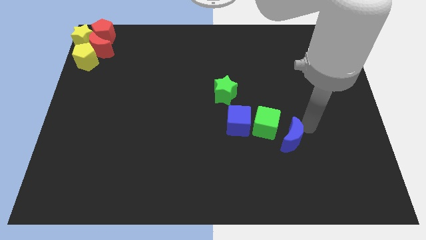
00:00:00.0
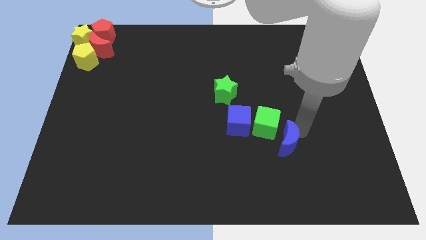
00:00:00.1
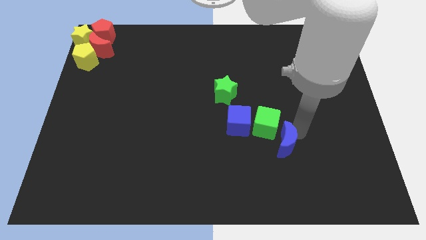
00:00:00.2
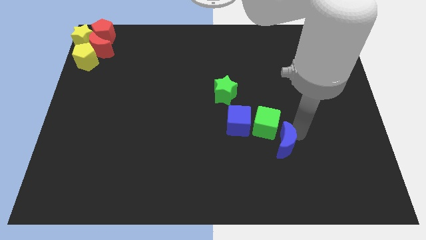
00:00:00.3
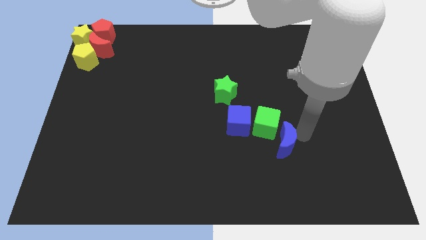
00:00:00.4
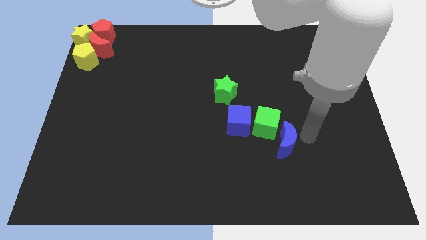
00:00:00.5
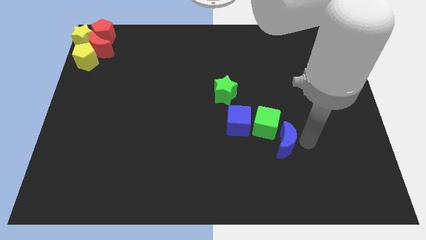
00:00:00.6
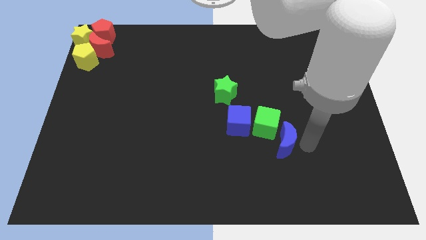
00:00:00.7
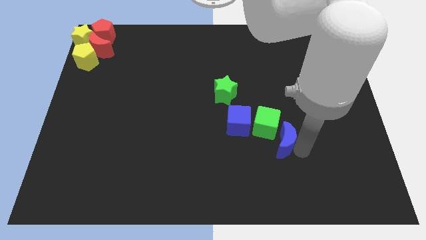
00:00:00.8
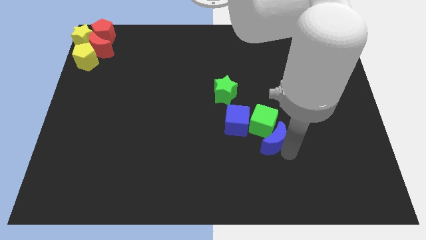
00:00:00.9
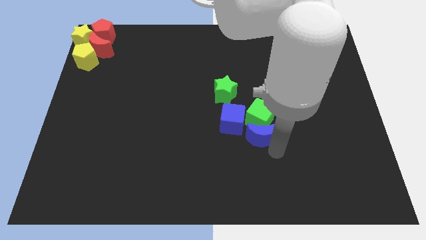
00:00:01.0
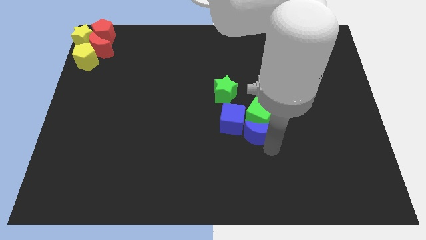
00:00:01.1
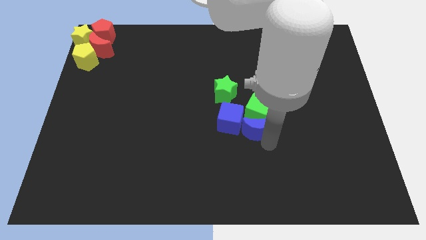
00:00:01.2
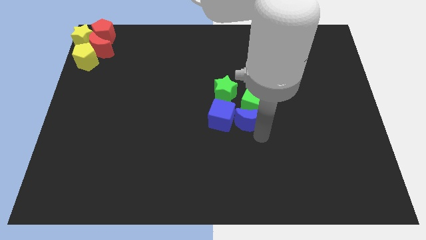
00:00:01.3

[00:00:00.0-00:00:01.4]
slide the blue moon into the green cube

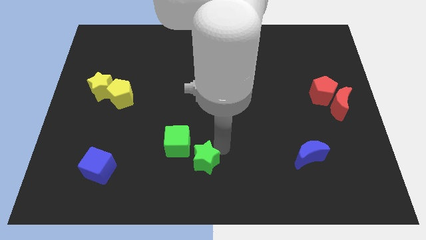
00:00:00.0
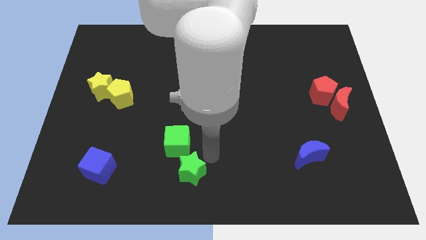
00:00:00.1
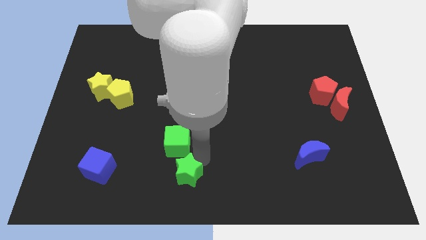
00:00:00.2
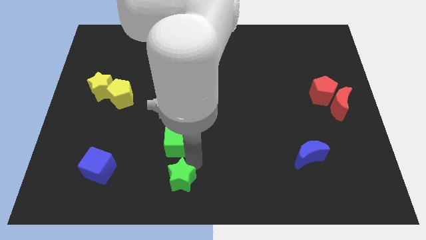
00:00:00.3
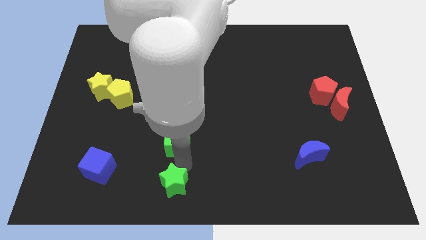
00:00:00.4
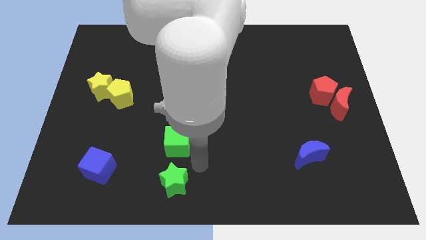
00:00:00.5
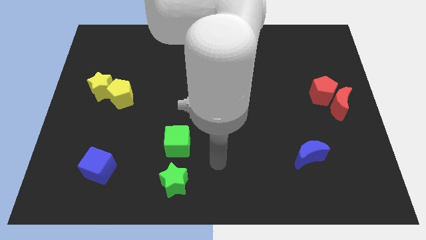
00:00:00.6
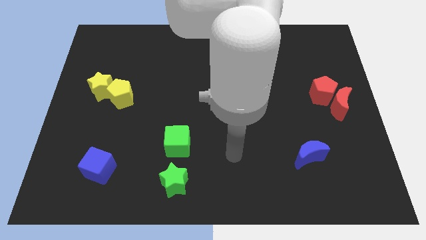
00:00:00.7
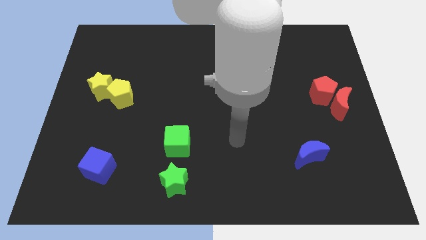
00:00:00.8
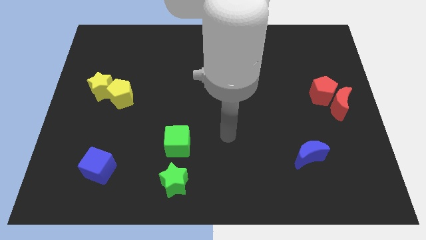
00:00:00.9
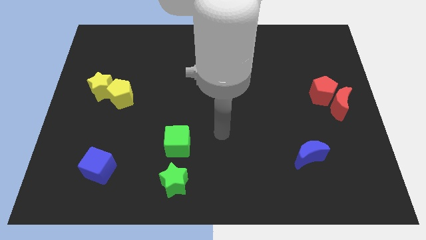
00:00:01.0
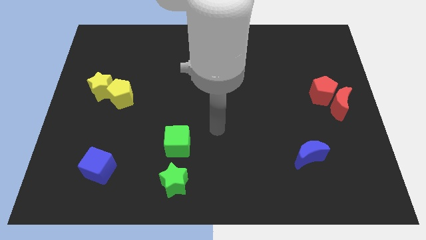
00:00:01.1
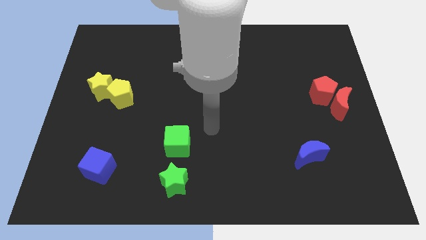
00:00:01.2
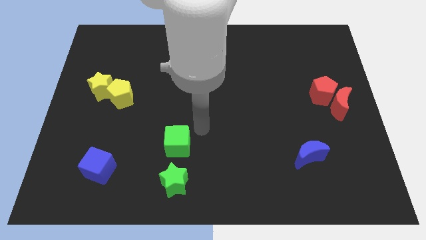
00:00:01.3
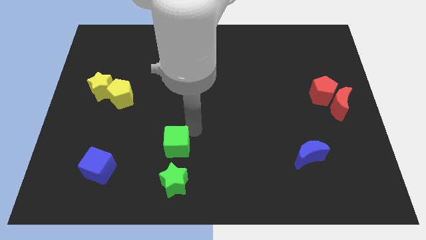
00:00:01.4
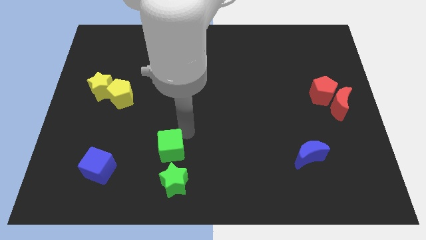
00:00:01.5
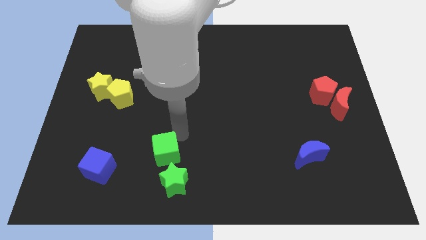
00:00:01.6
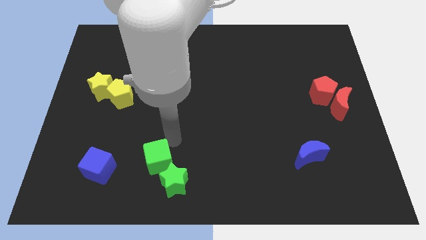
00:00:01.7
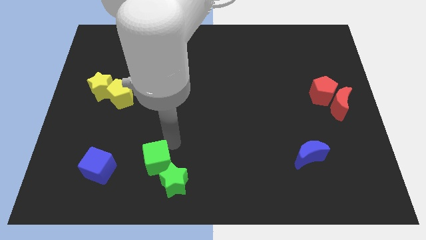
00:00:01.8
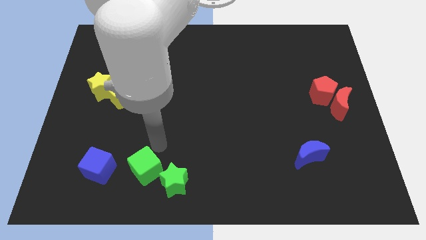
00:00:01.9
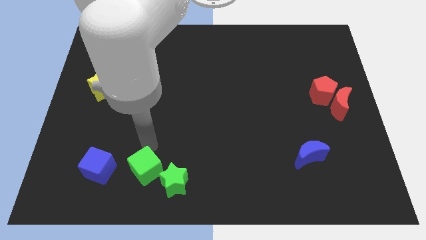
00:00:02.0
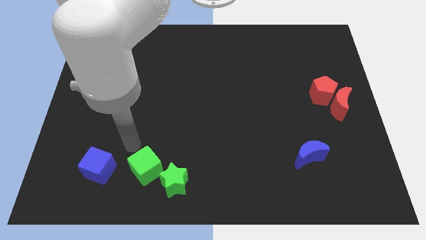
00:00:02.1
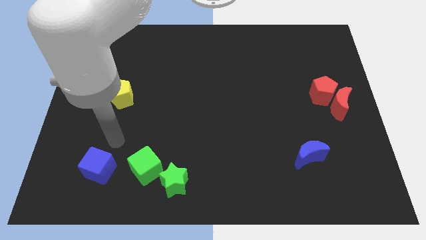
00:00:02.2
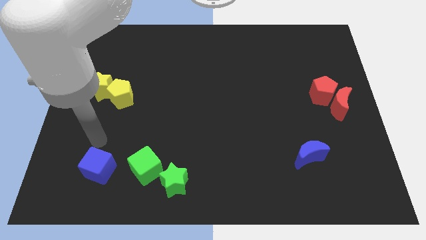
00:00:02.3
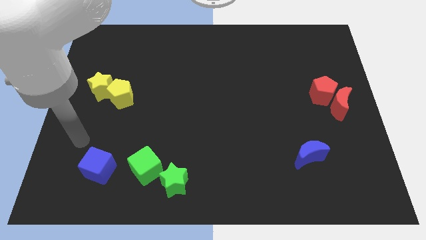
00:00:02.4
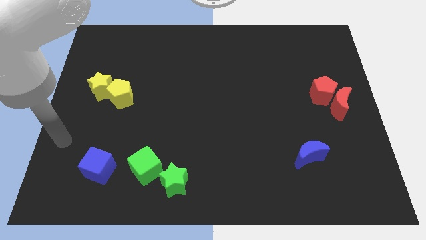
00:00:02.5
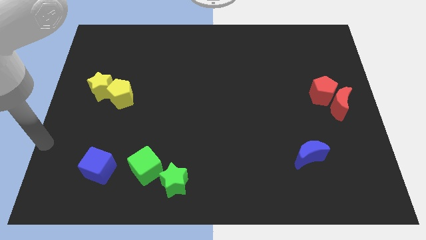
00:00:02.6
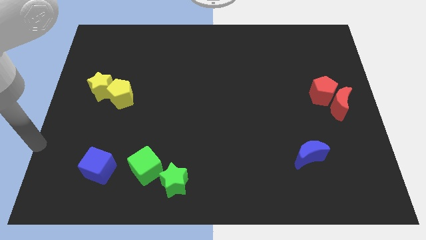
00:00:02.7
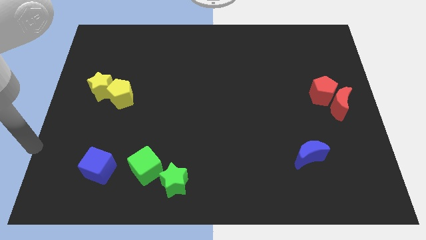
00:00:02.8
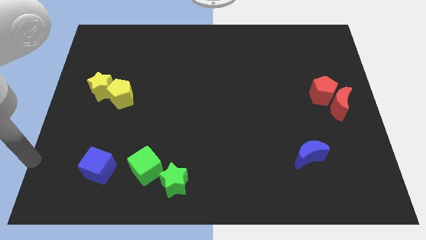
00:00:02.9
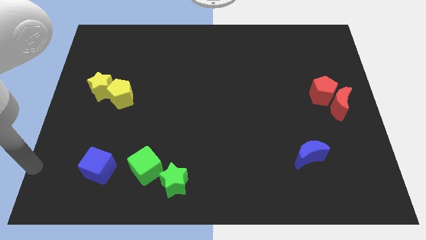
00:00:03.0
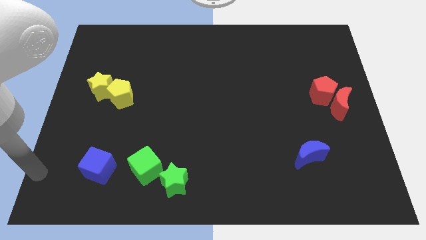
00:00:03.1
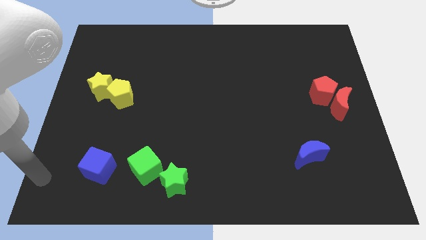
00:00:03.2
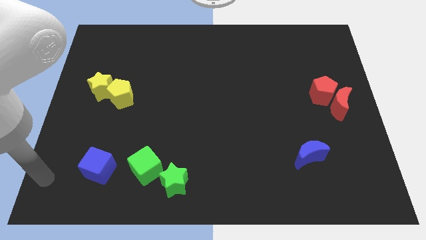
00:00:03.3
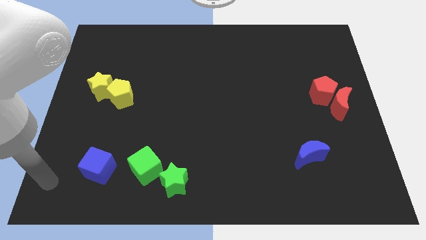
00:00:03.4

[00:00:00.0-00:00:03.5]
push the green star and green cube slightly downwards

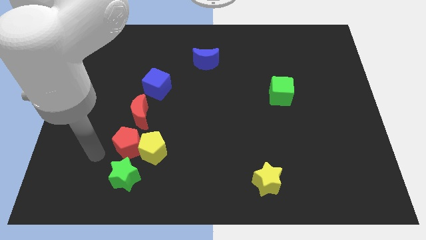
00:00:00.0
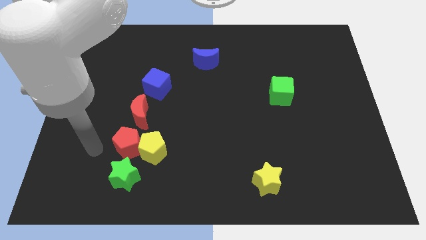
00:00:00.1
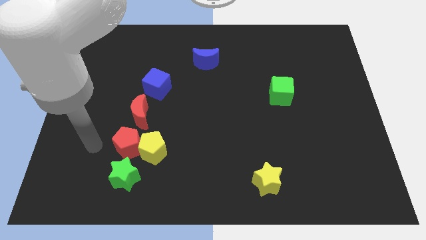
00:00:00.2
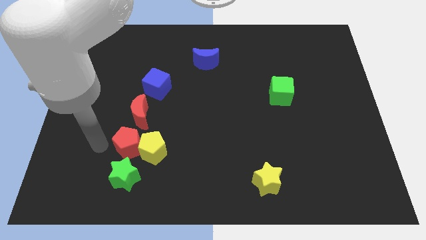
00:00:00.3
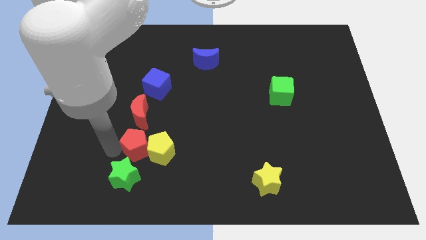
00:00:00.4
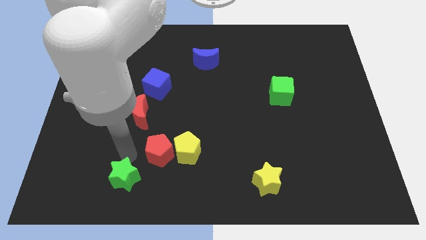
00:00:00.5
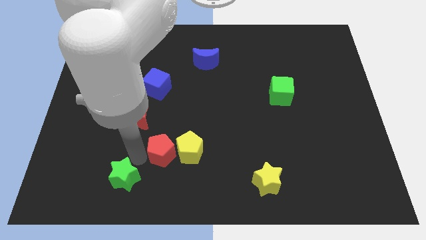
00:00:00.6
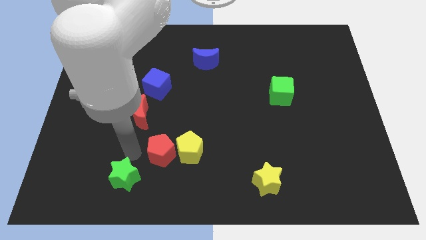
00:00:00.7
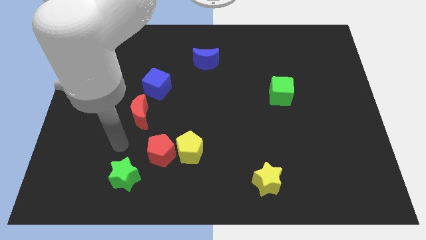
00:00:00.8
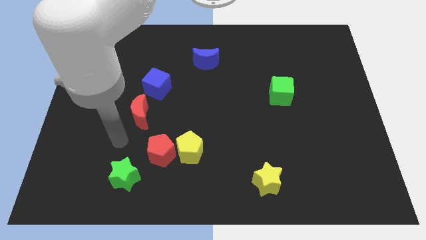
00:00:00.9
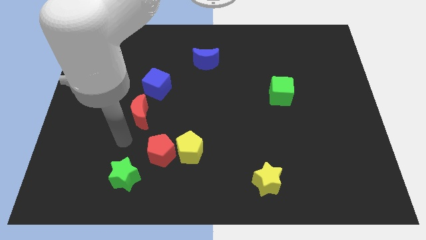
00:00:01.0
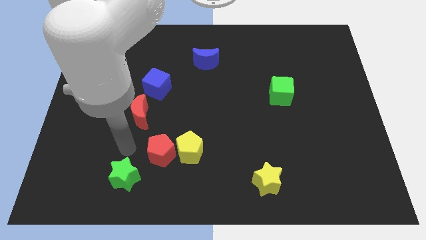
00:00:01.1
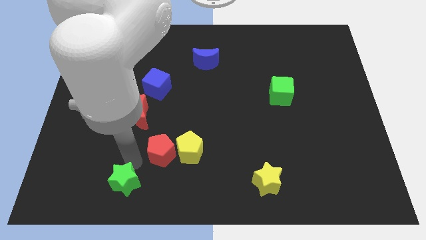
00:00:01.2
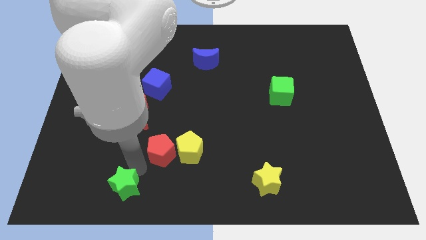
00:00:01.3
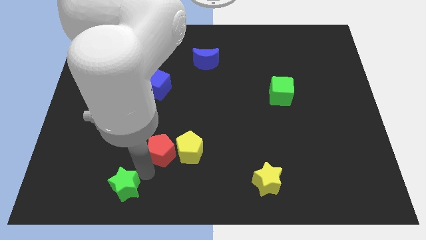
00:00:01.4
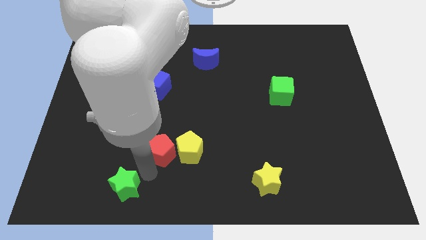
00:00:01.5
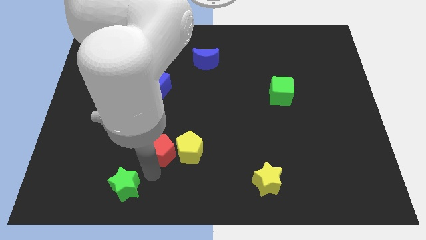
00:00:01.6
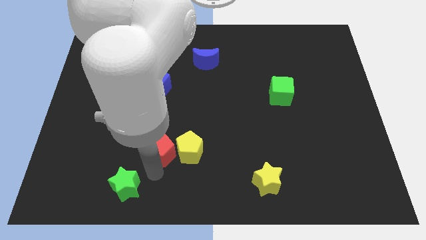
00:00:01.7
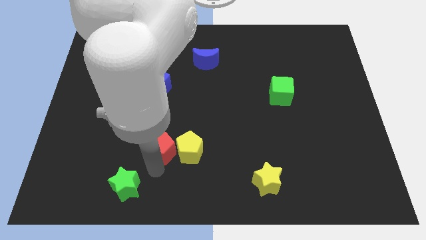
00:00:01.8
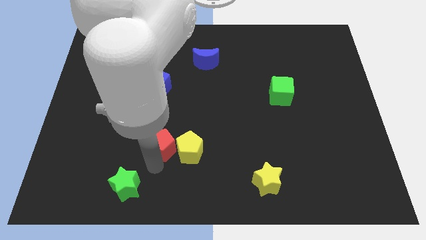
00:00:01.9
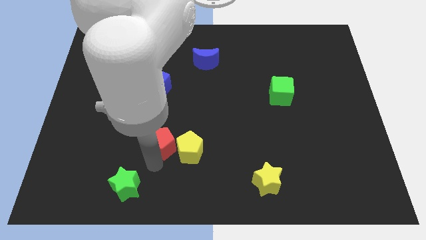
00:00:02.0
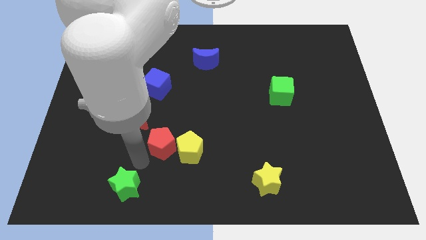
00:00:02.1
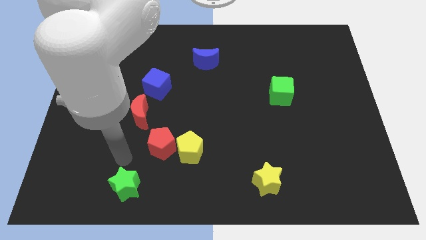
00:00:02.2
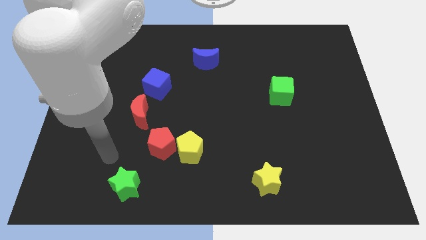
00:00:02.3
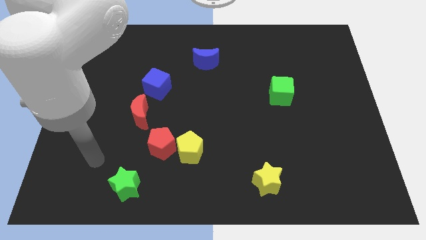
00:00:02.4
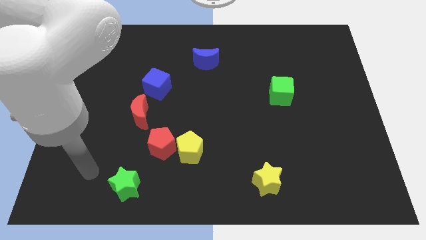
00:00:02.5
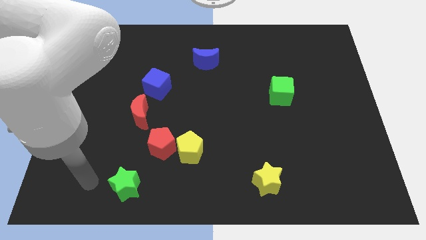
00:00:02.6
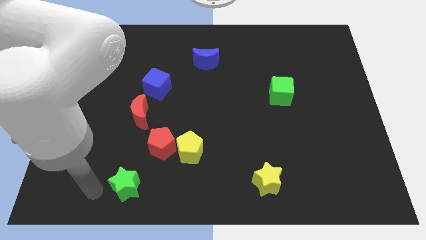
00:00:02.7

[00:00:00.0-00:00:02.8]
push the red pentagon with the yellow pentagon to the center

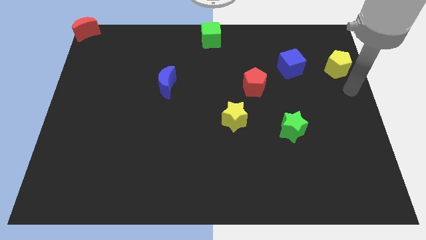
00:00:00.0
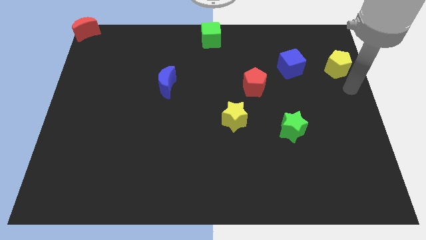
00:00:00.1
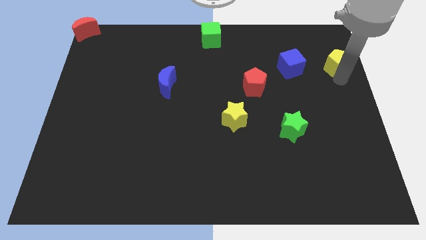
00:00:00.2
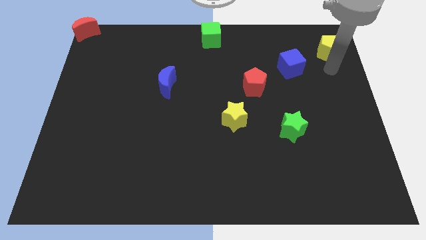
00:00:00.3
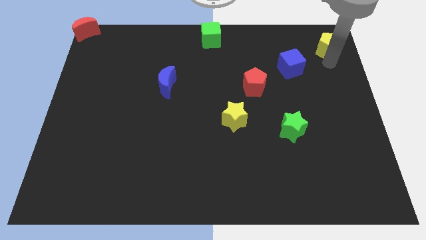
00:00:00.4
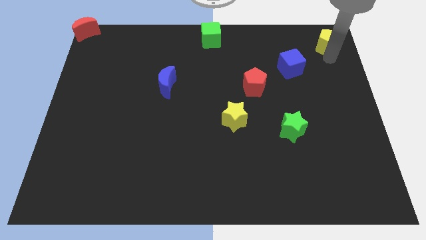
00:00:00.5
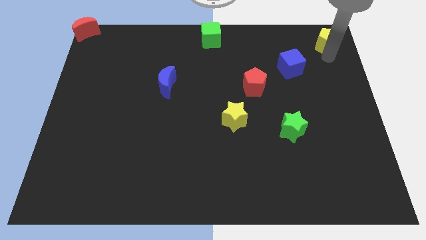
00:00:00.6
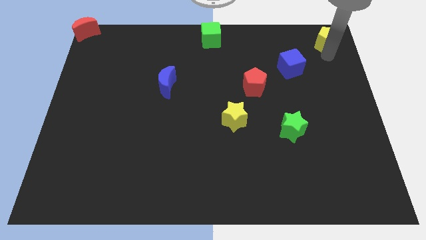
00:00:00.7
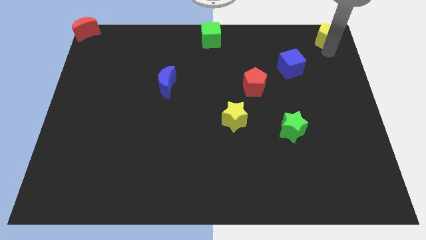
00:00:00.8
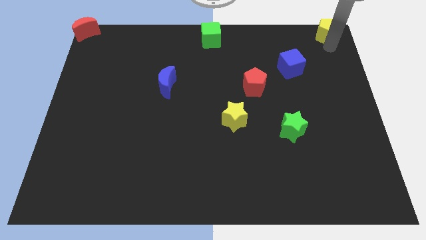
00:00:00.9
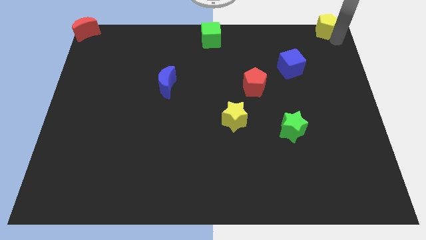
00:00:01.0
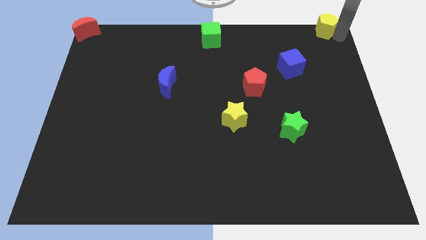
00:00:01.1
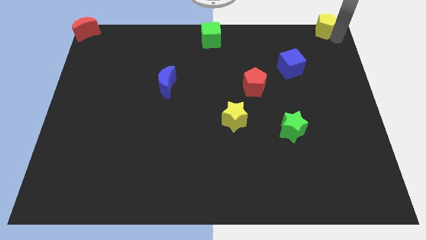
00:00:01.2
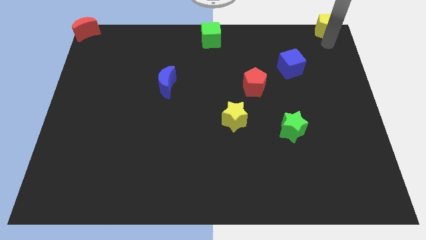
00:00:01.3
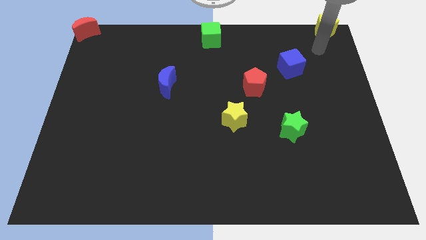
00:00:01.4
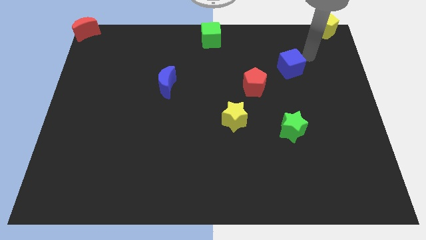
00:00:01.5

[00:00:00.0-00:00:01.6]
place the yellow pentagon at the top right of the table
